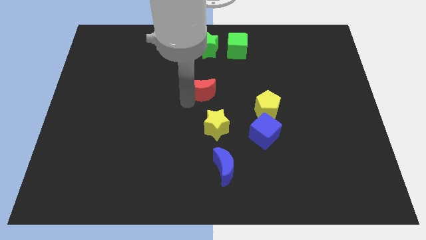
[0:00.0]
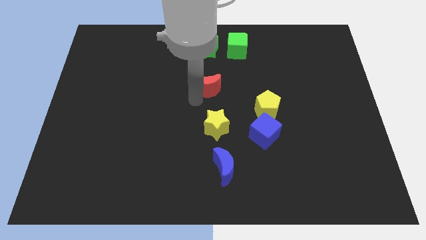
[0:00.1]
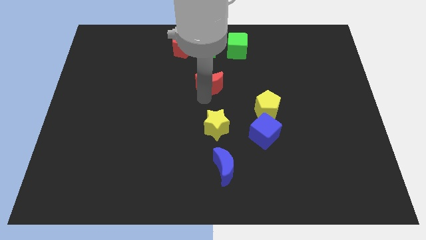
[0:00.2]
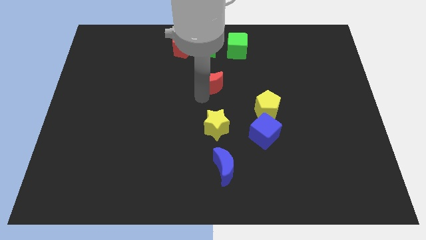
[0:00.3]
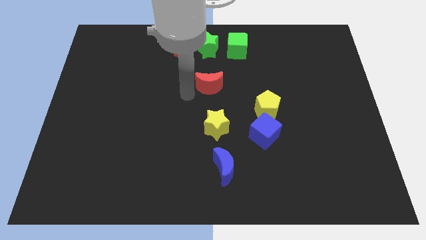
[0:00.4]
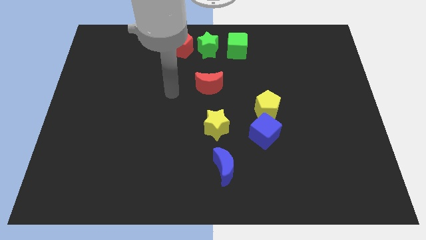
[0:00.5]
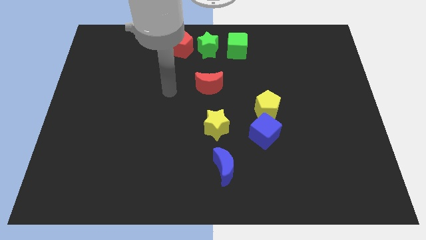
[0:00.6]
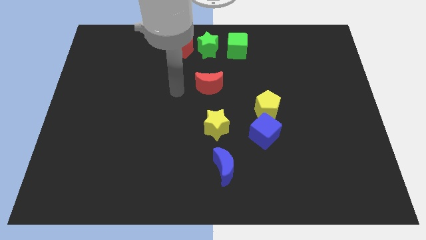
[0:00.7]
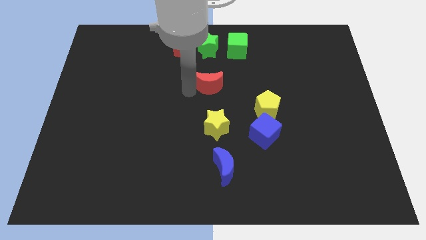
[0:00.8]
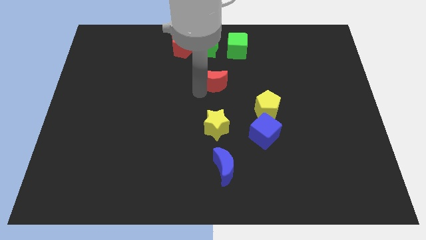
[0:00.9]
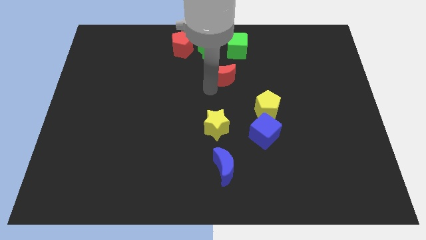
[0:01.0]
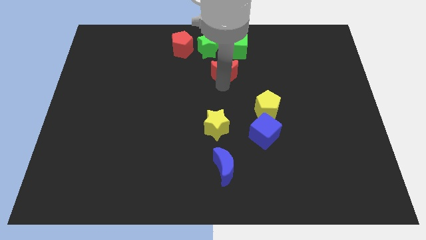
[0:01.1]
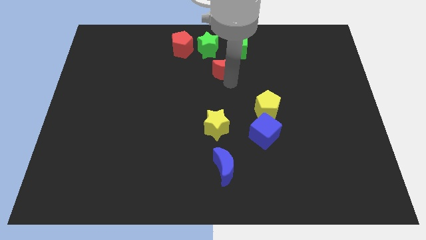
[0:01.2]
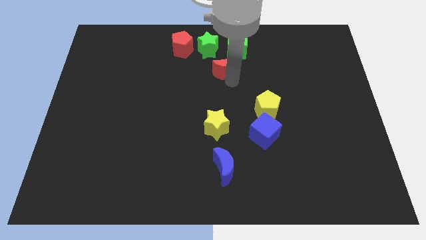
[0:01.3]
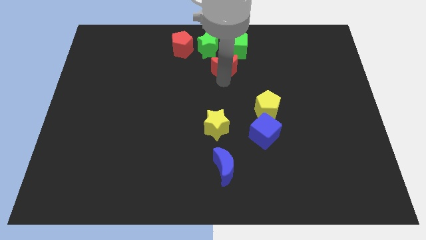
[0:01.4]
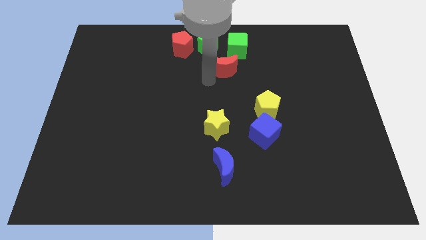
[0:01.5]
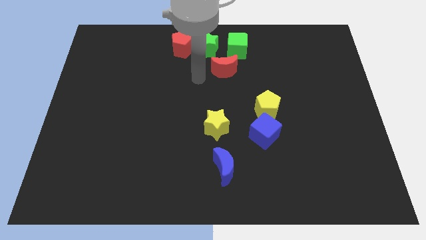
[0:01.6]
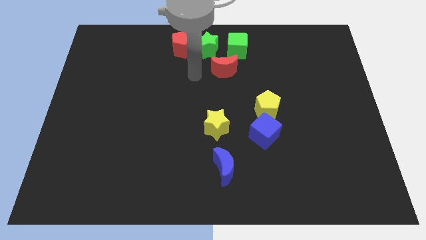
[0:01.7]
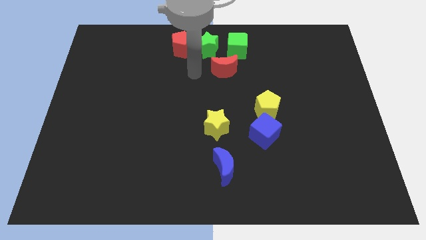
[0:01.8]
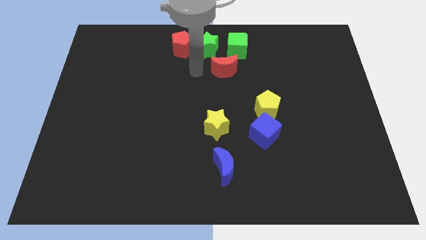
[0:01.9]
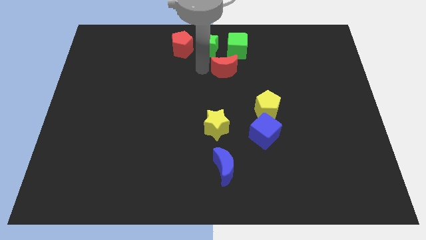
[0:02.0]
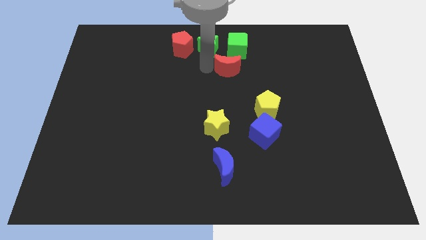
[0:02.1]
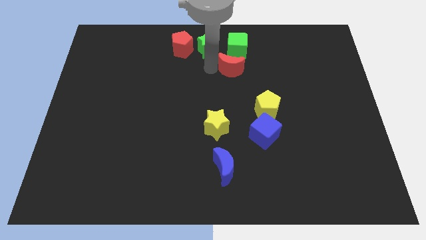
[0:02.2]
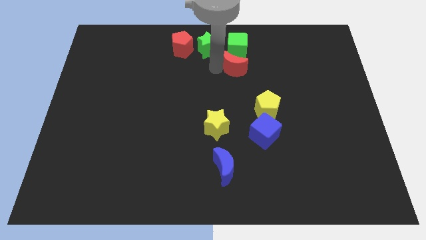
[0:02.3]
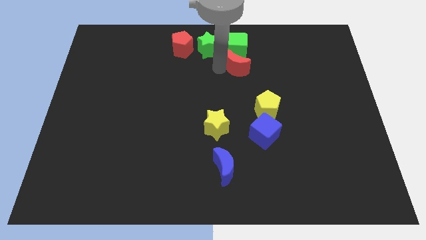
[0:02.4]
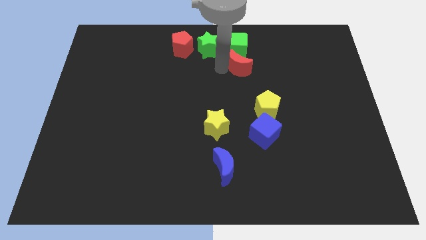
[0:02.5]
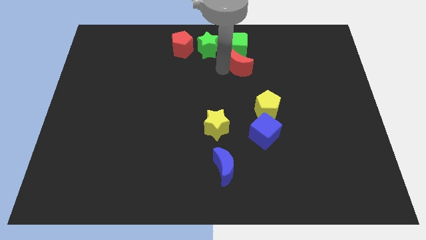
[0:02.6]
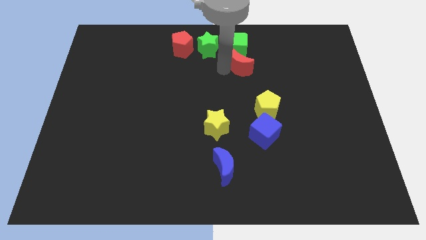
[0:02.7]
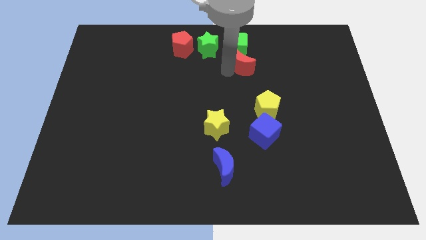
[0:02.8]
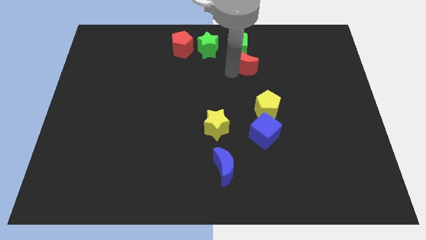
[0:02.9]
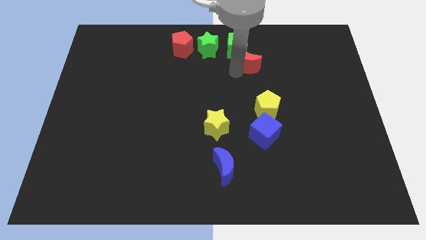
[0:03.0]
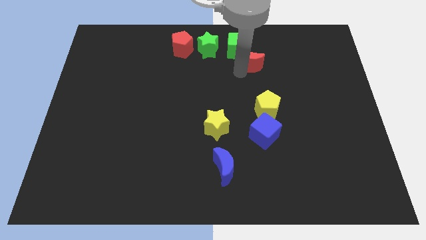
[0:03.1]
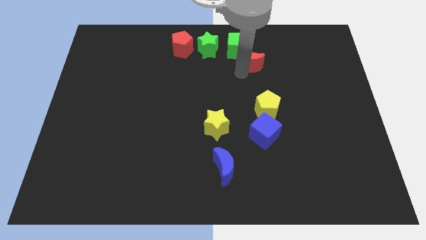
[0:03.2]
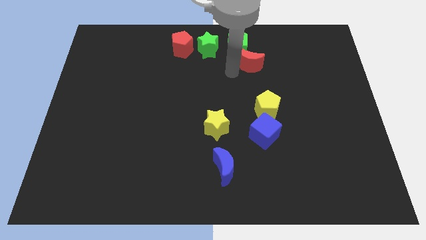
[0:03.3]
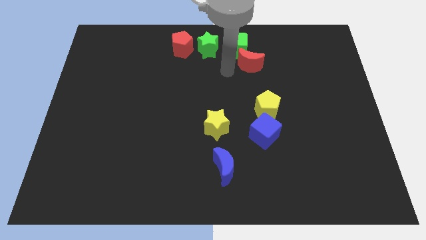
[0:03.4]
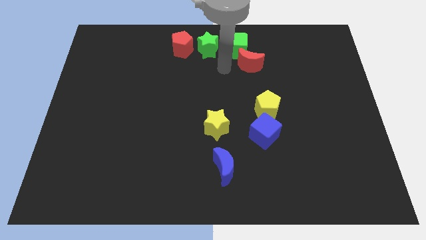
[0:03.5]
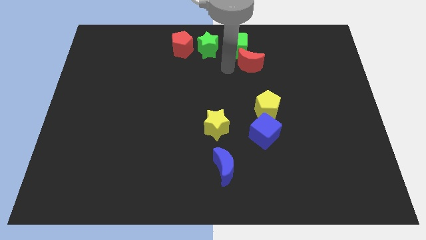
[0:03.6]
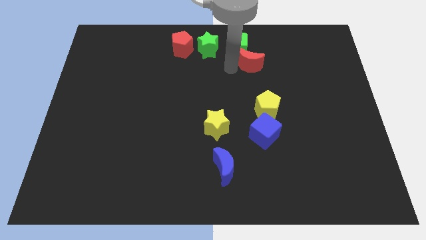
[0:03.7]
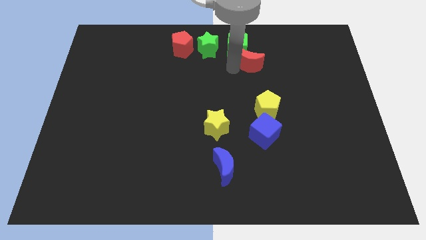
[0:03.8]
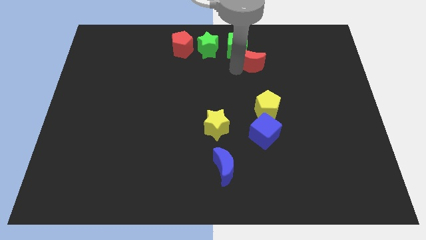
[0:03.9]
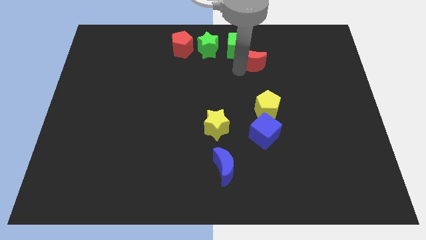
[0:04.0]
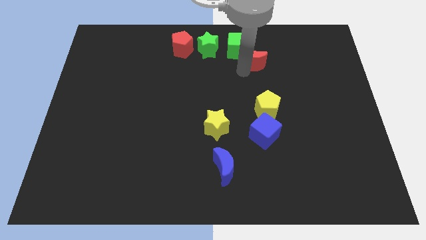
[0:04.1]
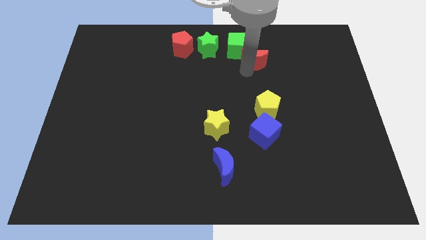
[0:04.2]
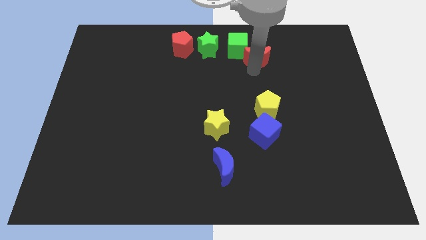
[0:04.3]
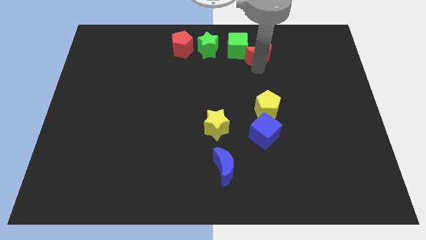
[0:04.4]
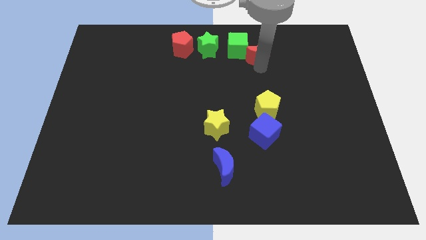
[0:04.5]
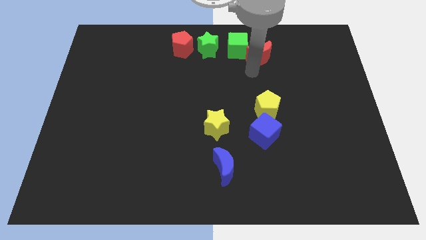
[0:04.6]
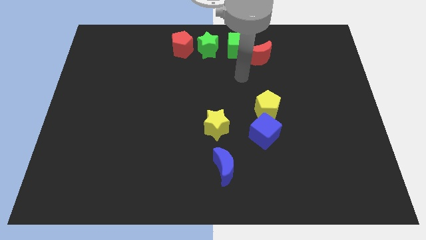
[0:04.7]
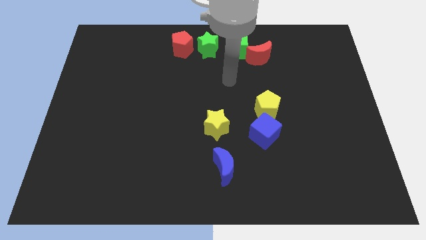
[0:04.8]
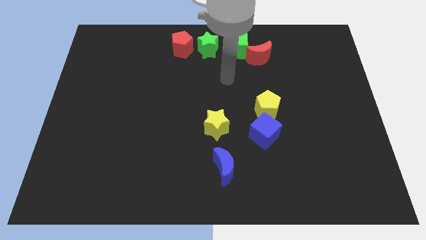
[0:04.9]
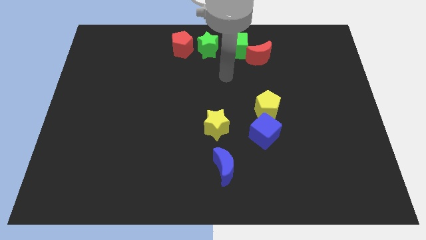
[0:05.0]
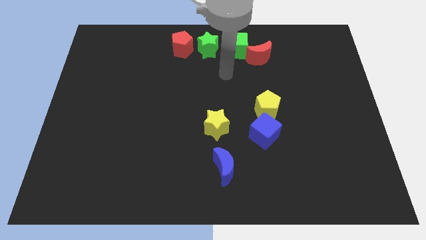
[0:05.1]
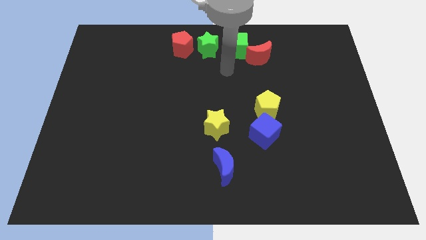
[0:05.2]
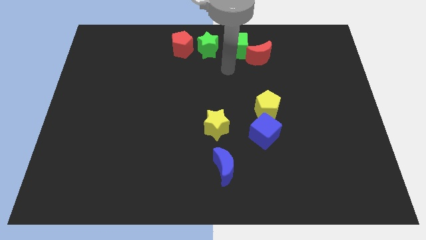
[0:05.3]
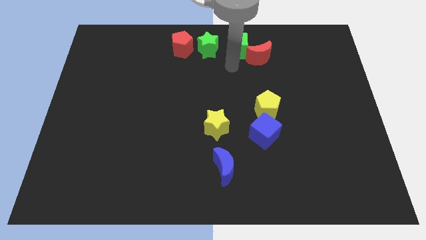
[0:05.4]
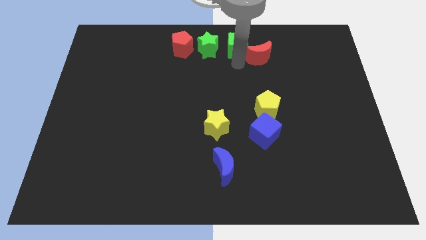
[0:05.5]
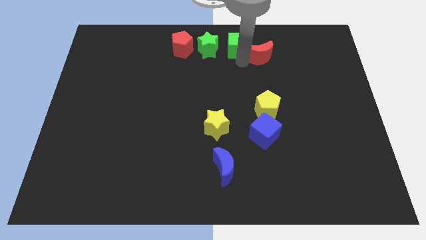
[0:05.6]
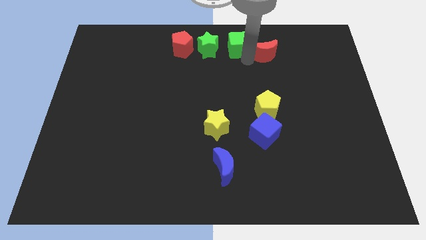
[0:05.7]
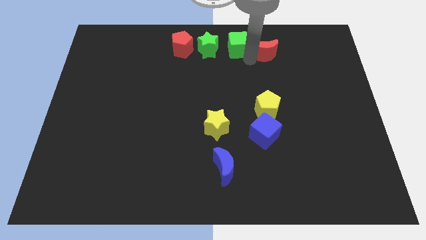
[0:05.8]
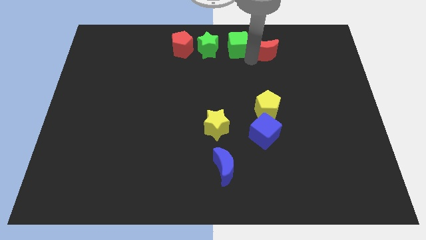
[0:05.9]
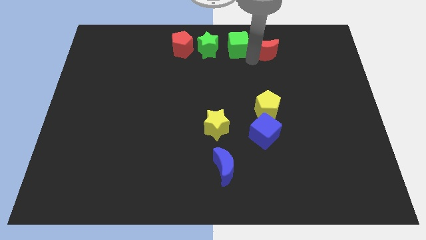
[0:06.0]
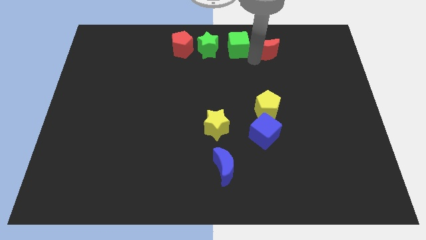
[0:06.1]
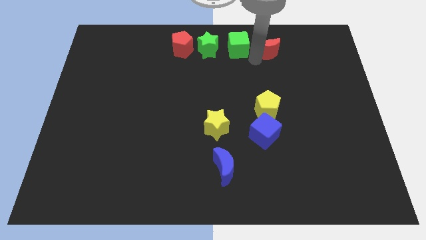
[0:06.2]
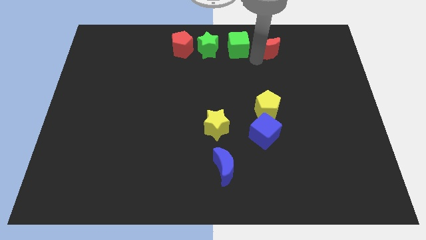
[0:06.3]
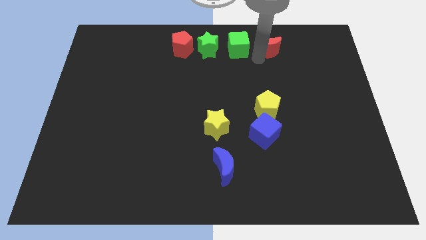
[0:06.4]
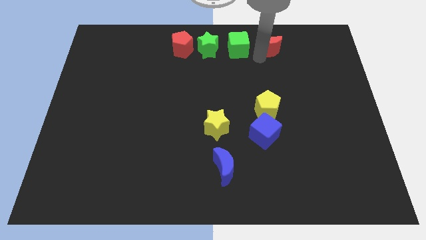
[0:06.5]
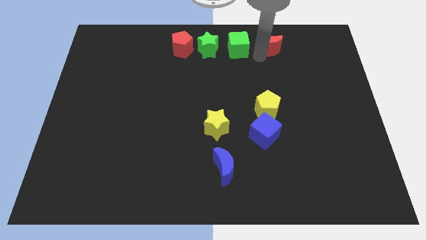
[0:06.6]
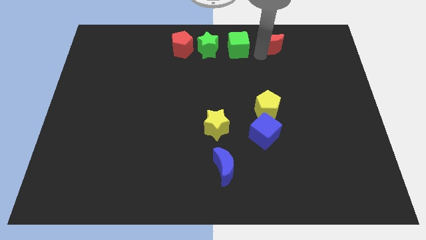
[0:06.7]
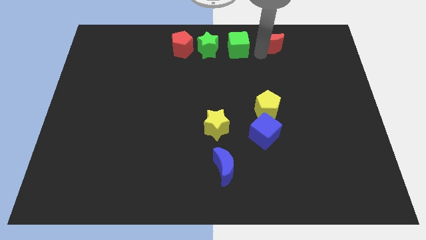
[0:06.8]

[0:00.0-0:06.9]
place the red moon right to the green cube

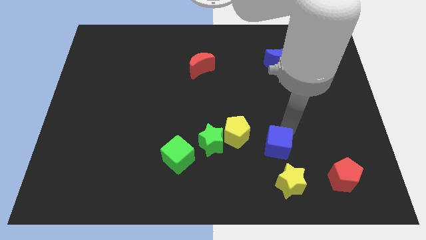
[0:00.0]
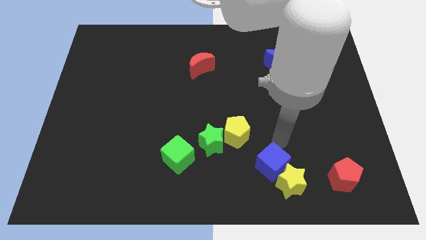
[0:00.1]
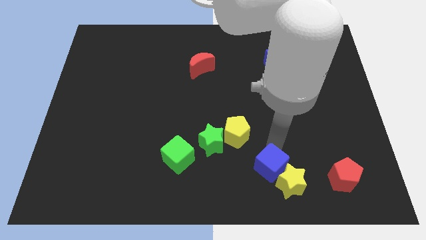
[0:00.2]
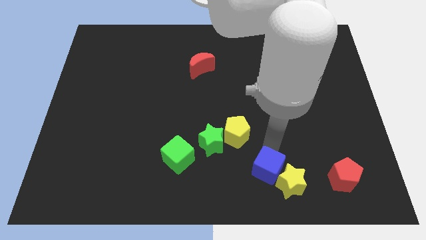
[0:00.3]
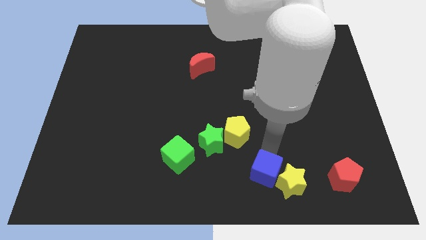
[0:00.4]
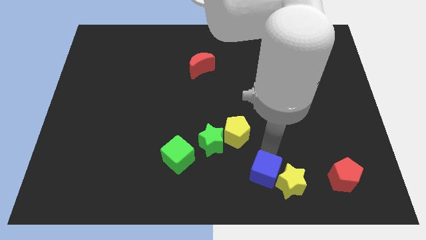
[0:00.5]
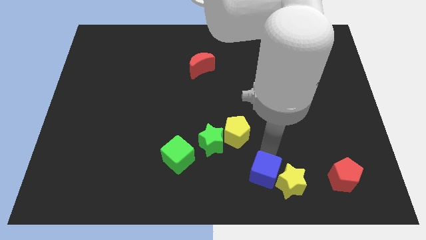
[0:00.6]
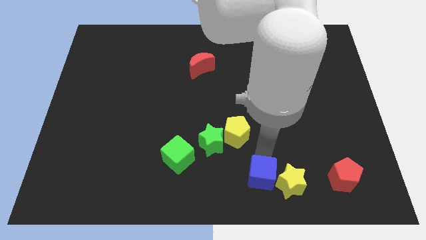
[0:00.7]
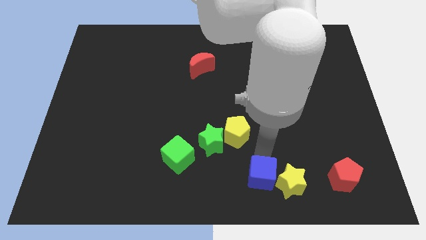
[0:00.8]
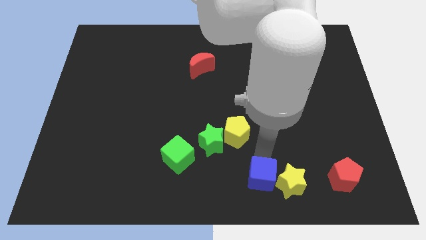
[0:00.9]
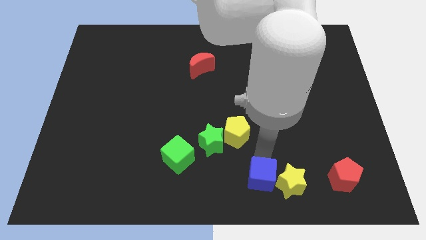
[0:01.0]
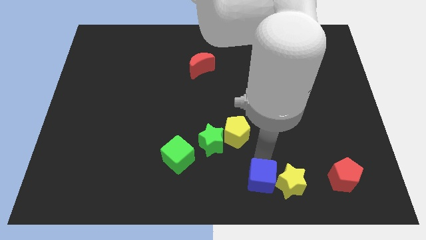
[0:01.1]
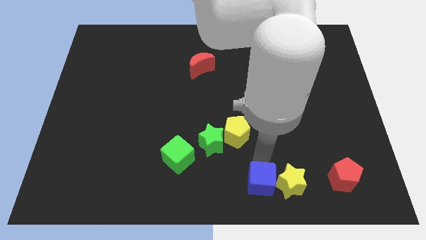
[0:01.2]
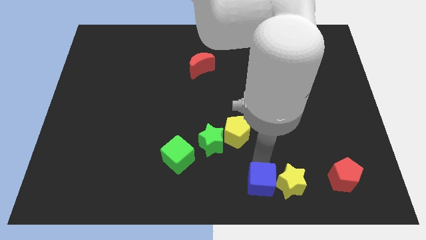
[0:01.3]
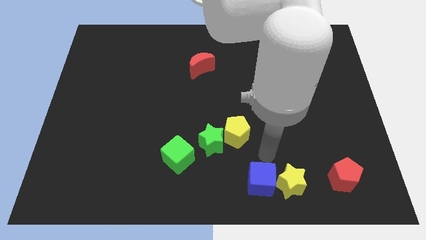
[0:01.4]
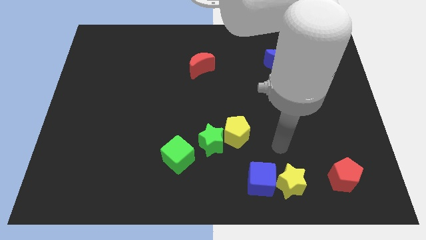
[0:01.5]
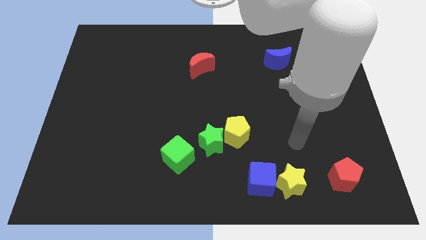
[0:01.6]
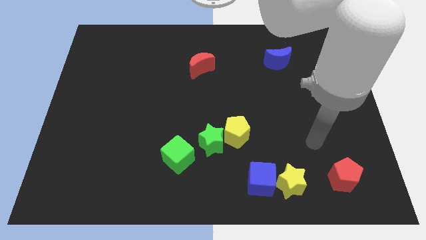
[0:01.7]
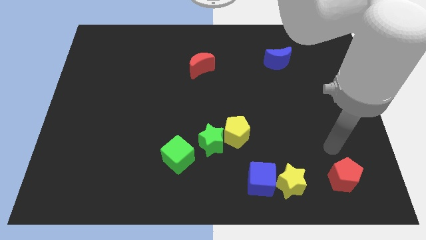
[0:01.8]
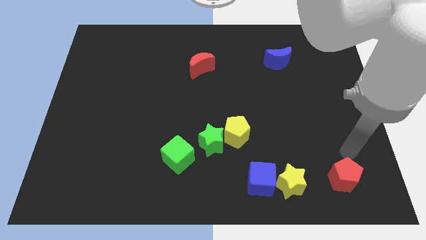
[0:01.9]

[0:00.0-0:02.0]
move the blue cube to the left of the yellow star
